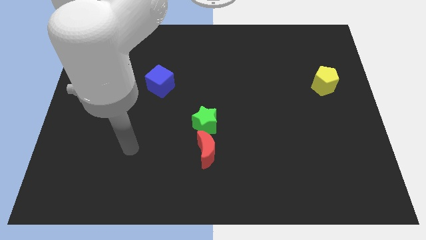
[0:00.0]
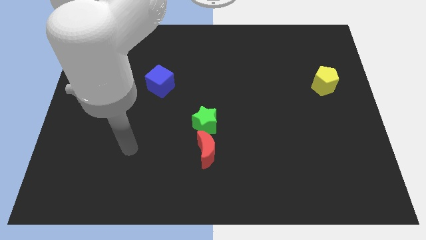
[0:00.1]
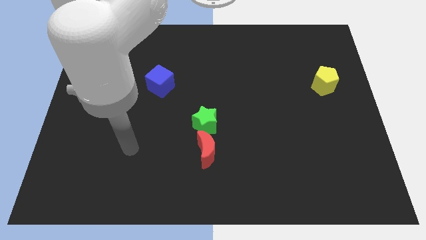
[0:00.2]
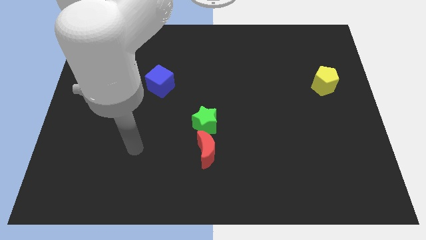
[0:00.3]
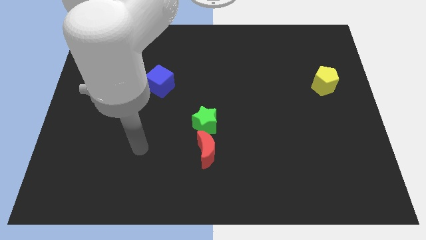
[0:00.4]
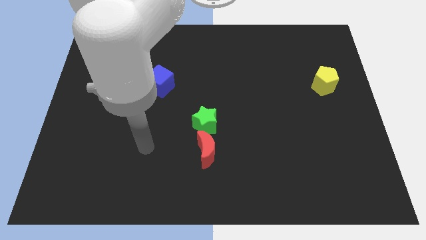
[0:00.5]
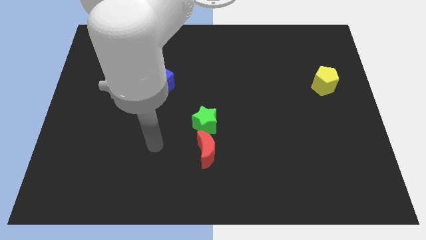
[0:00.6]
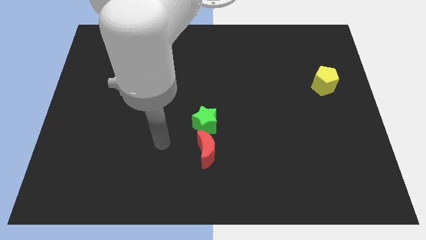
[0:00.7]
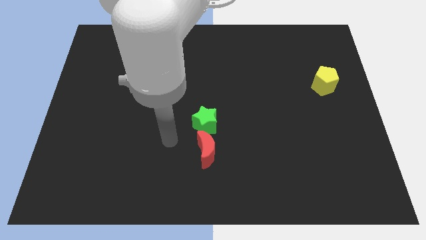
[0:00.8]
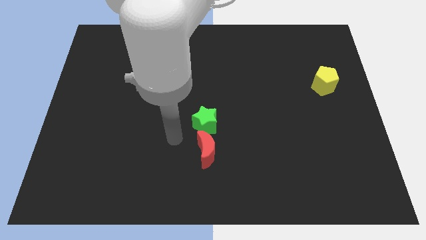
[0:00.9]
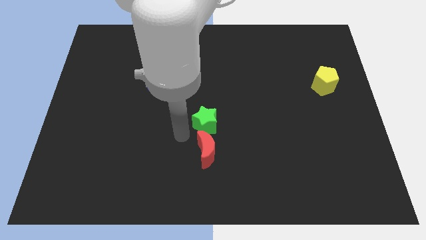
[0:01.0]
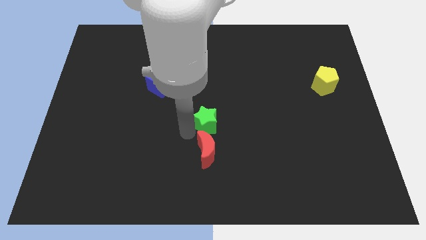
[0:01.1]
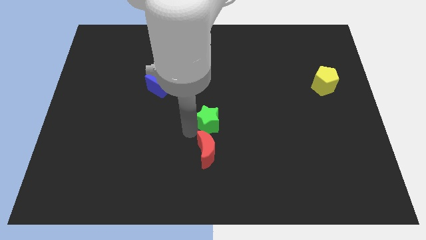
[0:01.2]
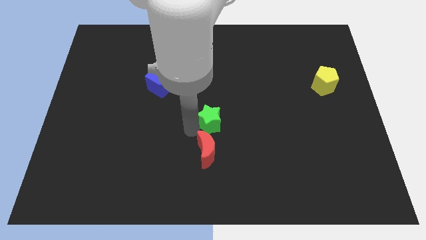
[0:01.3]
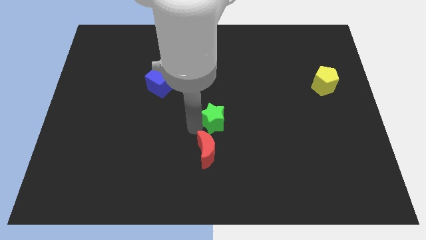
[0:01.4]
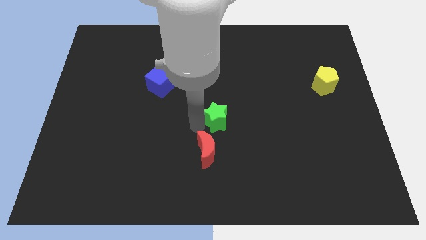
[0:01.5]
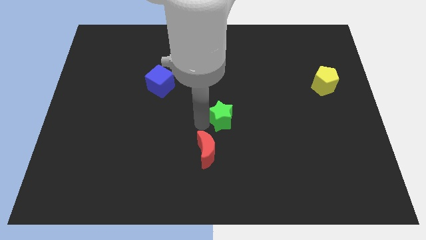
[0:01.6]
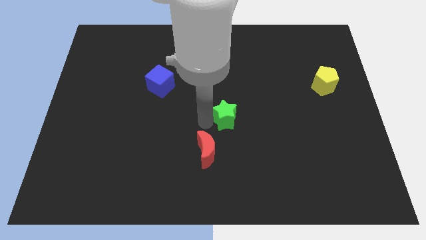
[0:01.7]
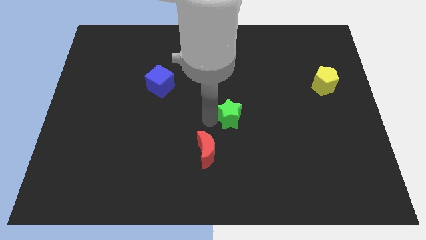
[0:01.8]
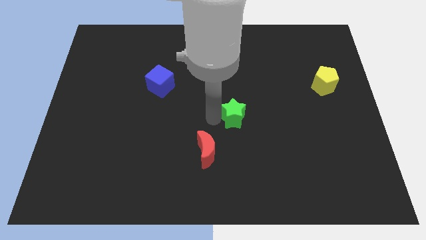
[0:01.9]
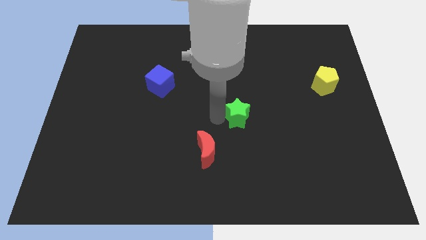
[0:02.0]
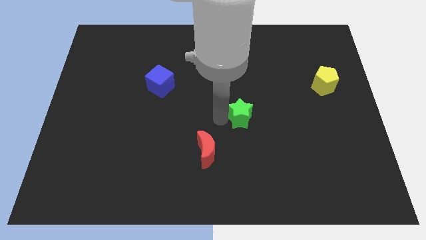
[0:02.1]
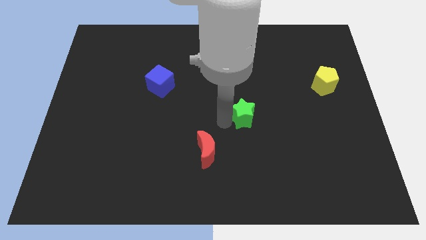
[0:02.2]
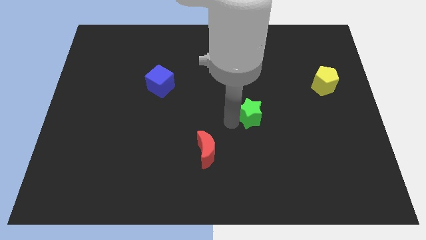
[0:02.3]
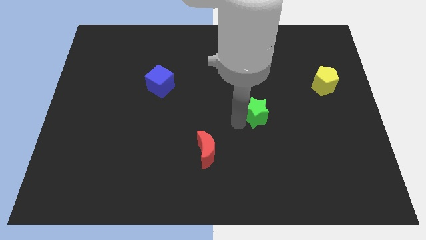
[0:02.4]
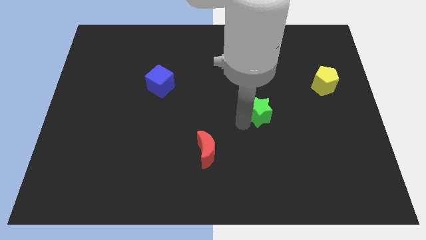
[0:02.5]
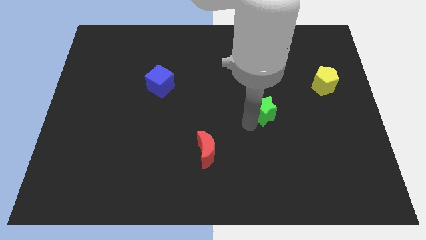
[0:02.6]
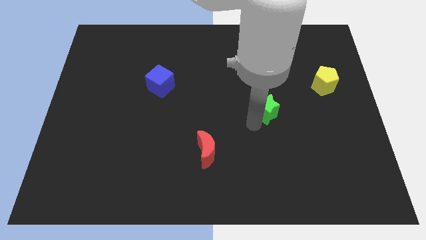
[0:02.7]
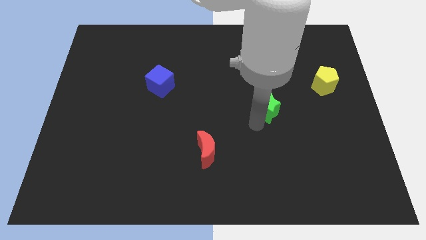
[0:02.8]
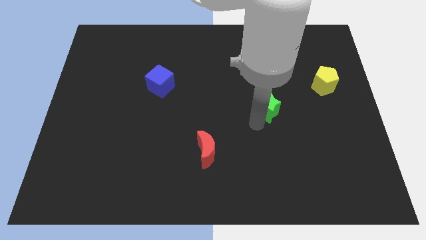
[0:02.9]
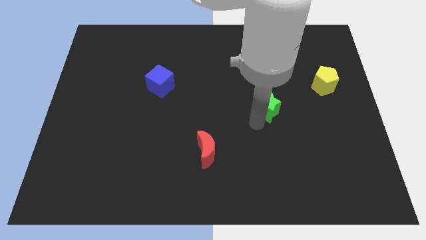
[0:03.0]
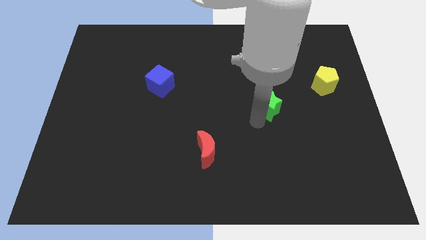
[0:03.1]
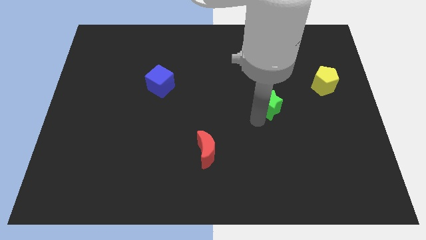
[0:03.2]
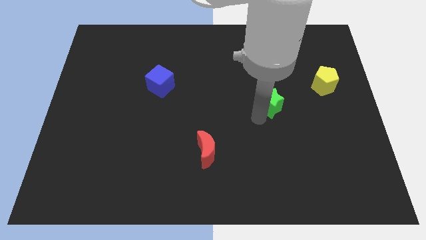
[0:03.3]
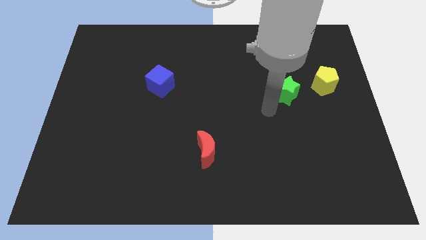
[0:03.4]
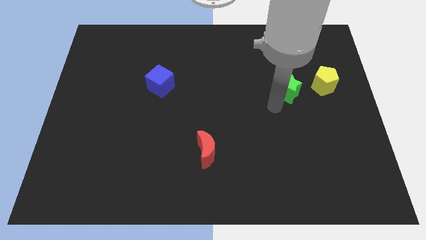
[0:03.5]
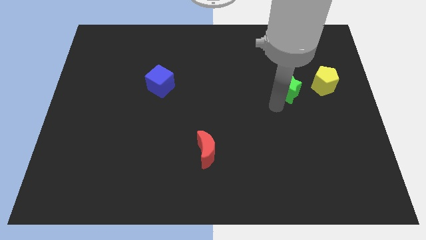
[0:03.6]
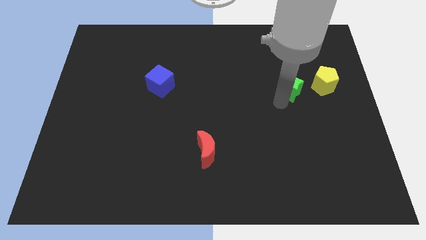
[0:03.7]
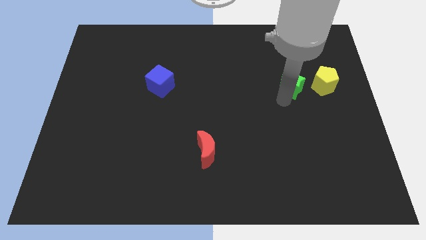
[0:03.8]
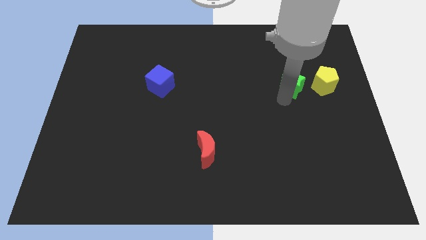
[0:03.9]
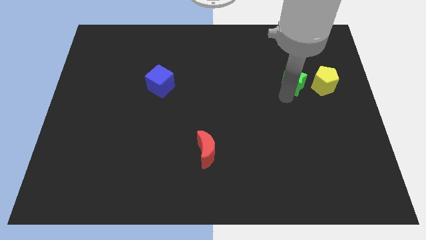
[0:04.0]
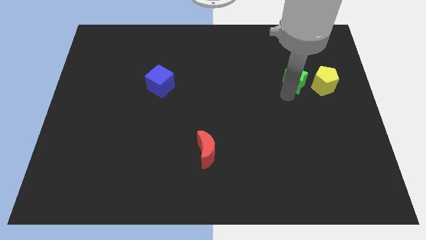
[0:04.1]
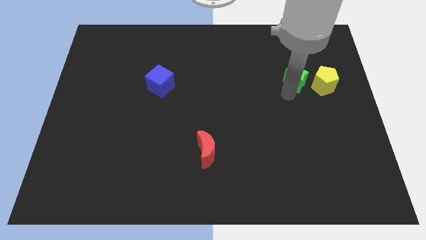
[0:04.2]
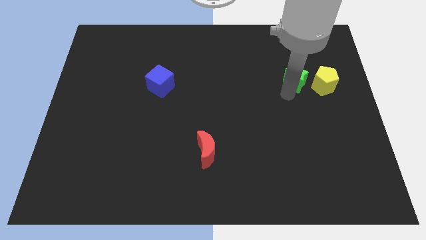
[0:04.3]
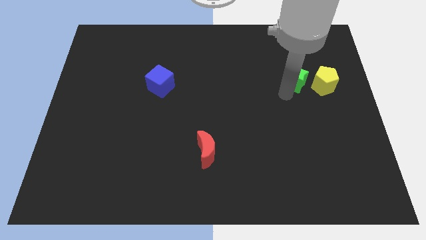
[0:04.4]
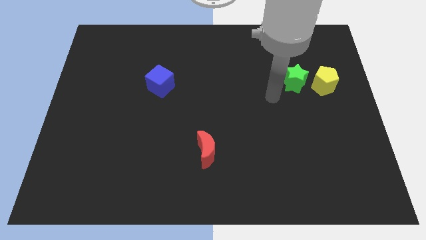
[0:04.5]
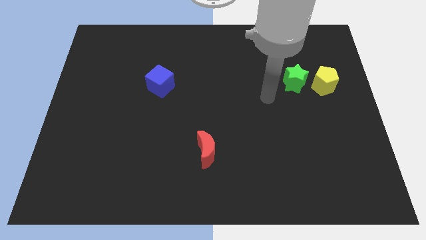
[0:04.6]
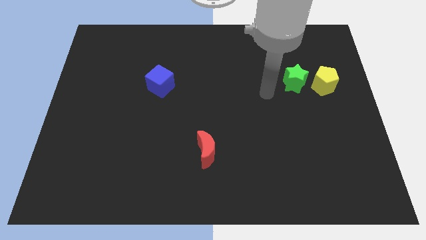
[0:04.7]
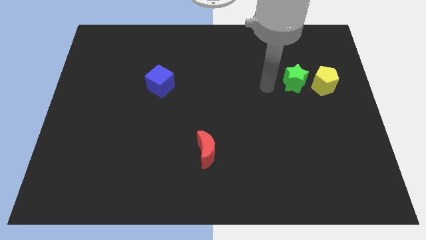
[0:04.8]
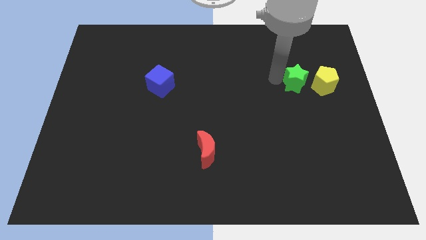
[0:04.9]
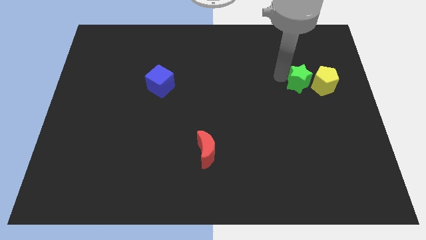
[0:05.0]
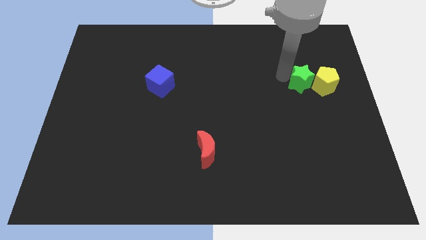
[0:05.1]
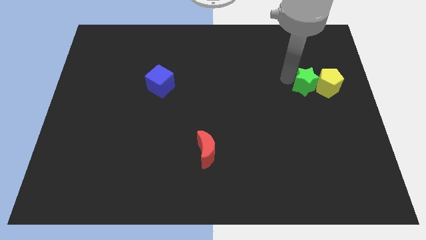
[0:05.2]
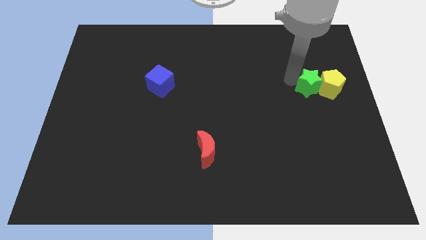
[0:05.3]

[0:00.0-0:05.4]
move the green star next to the pentagon

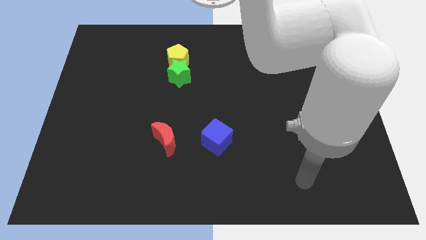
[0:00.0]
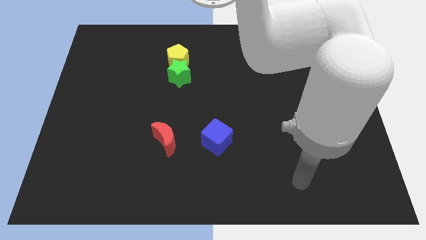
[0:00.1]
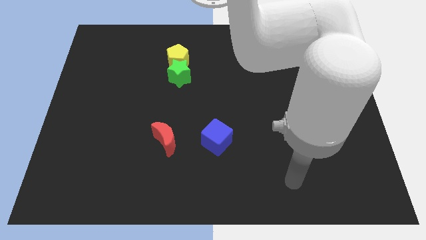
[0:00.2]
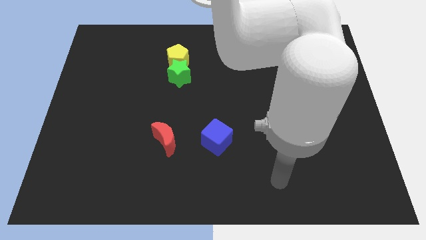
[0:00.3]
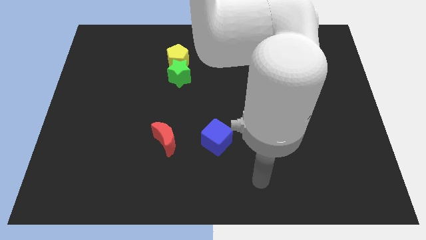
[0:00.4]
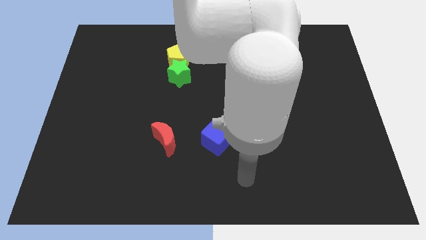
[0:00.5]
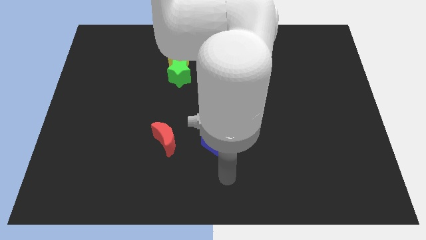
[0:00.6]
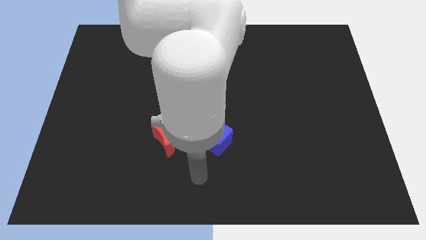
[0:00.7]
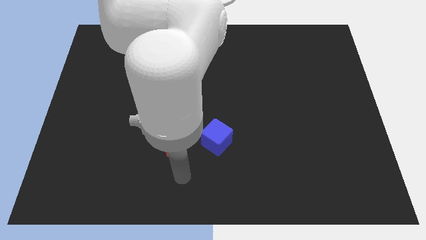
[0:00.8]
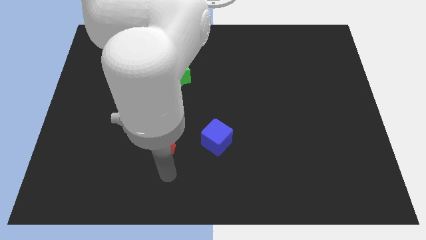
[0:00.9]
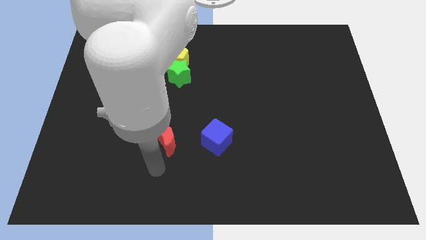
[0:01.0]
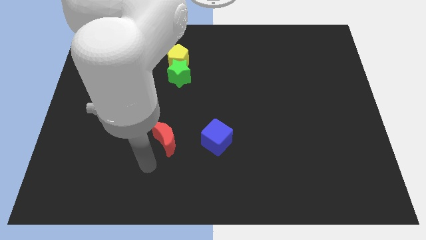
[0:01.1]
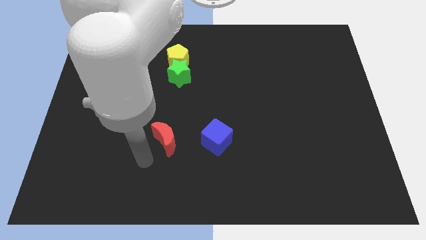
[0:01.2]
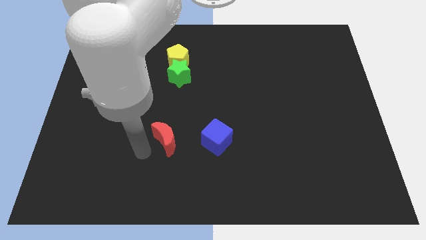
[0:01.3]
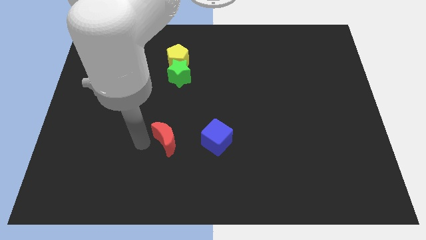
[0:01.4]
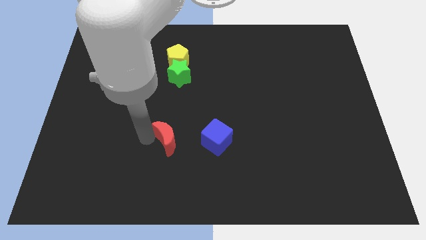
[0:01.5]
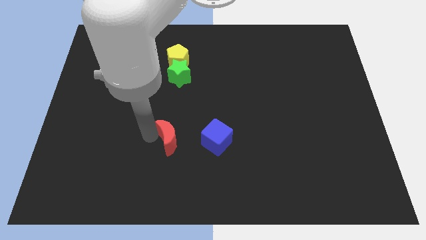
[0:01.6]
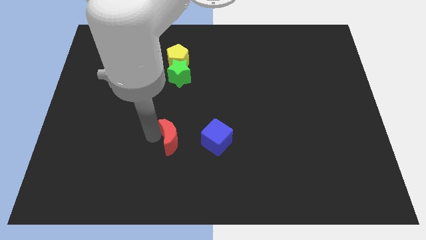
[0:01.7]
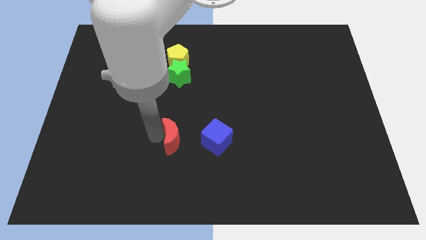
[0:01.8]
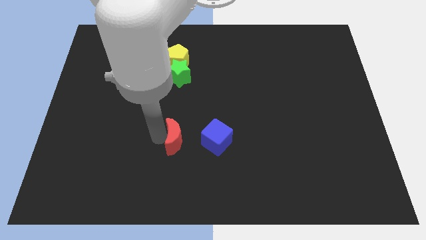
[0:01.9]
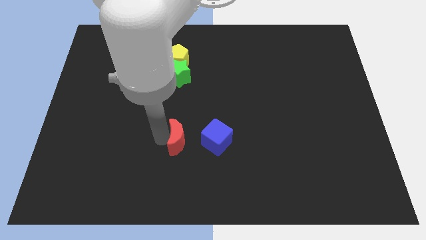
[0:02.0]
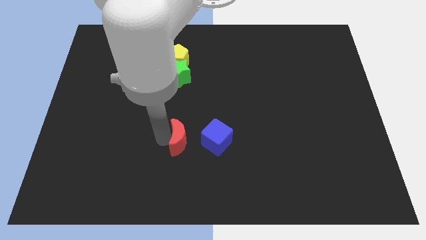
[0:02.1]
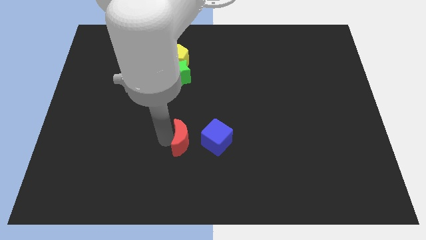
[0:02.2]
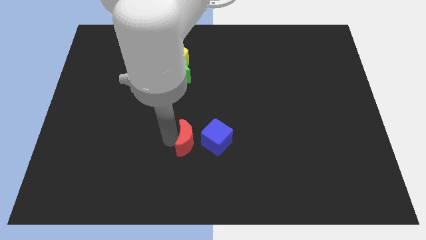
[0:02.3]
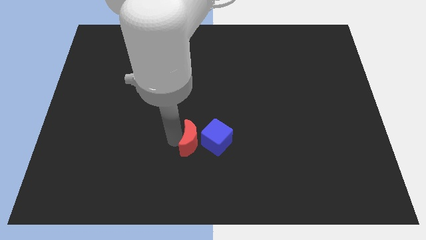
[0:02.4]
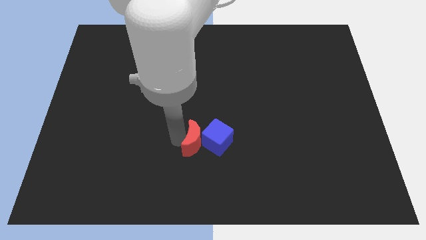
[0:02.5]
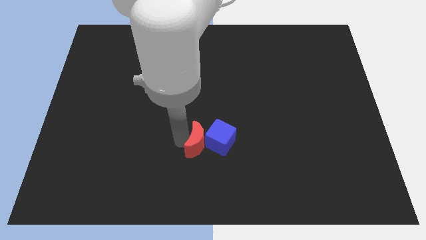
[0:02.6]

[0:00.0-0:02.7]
slide the red moon close to the blue cube

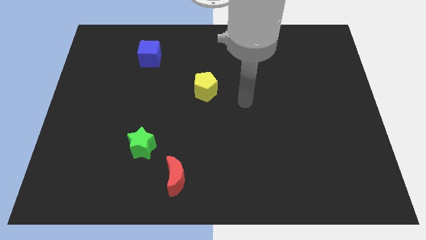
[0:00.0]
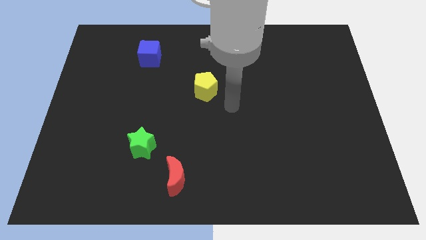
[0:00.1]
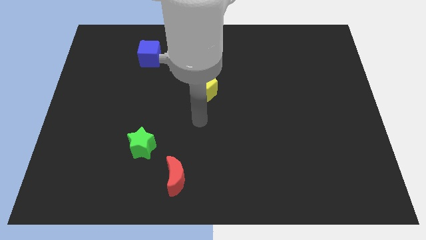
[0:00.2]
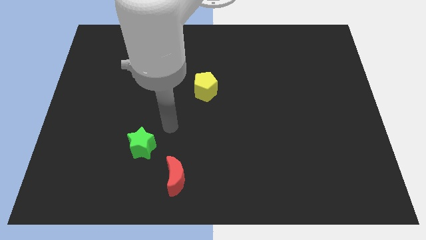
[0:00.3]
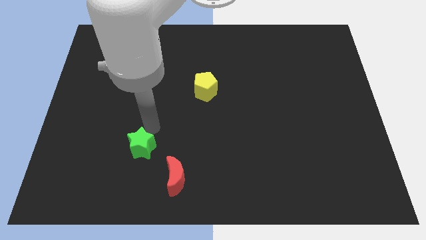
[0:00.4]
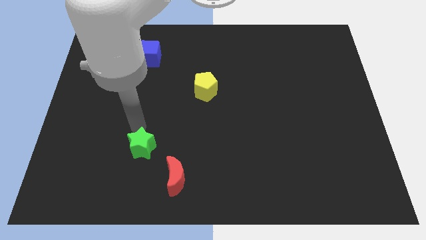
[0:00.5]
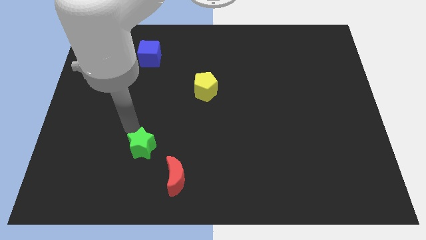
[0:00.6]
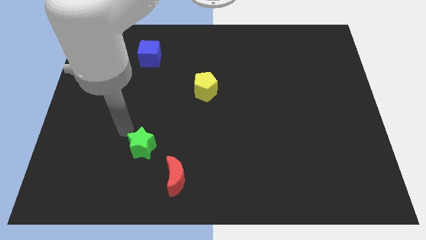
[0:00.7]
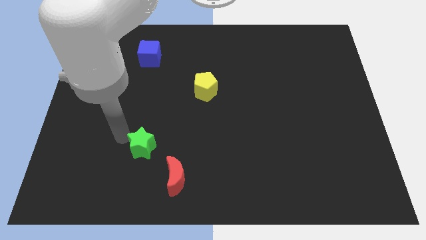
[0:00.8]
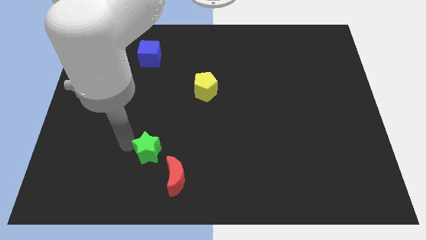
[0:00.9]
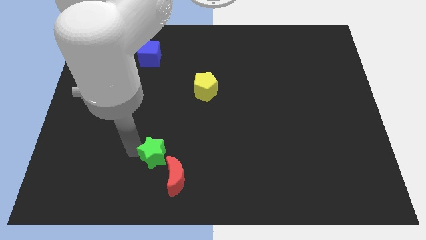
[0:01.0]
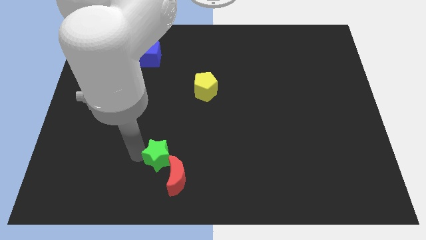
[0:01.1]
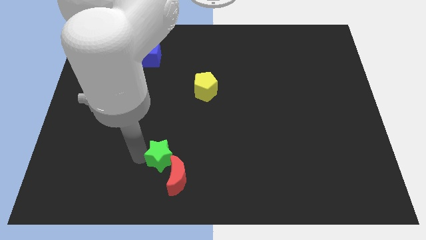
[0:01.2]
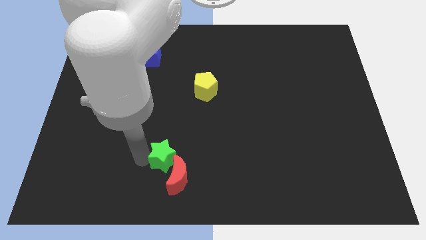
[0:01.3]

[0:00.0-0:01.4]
slide the green star towards the moon
